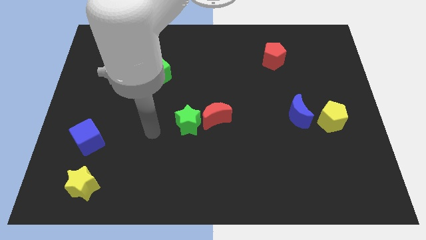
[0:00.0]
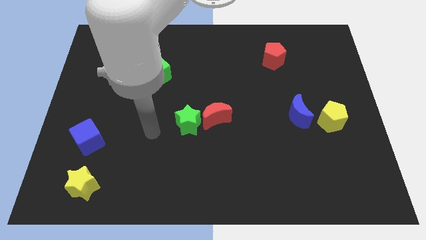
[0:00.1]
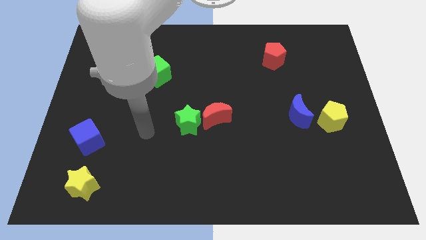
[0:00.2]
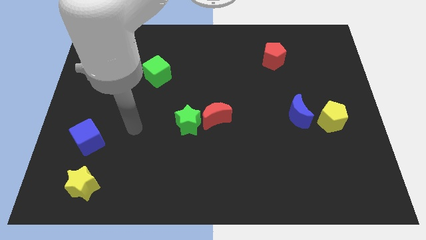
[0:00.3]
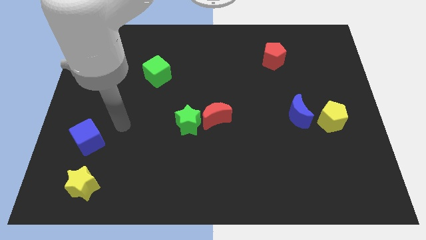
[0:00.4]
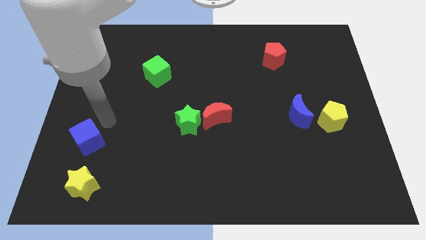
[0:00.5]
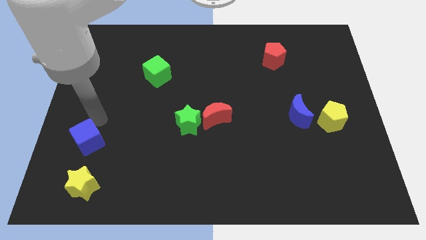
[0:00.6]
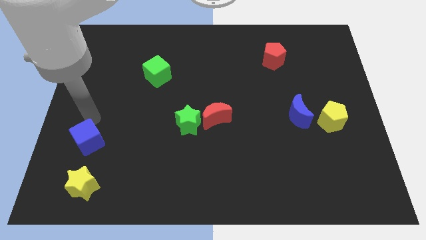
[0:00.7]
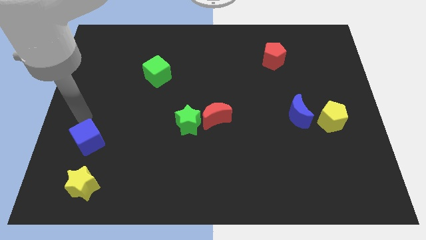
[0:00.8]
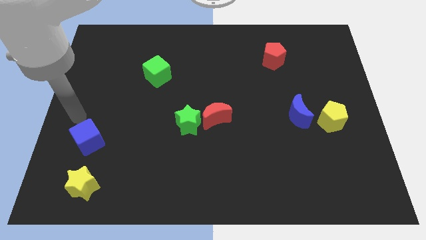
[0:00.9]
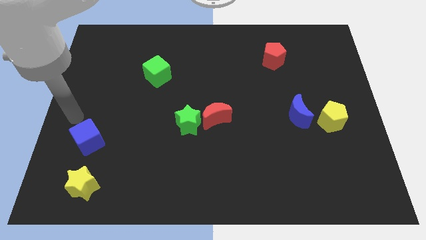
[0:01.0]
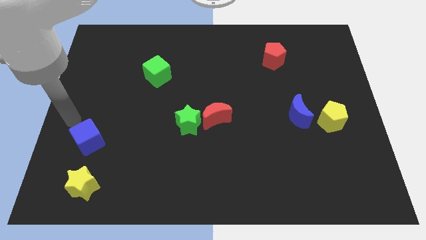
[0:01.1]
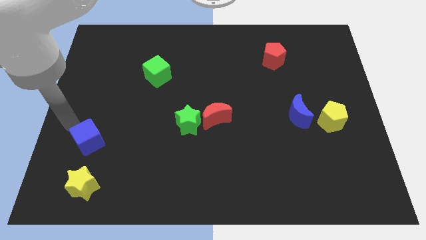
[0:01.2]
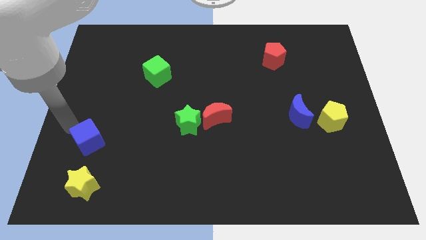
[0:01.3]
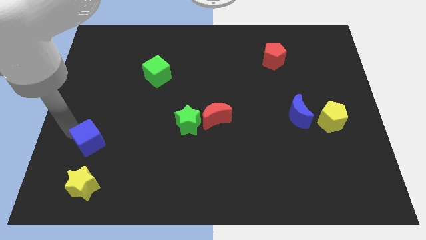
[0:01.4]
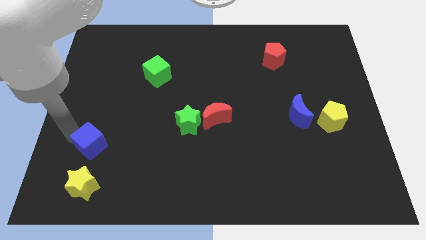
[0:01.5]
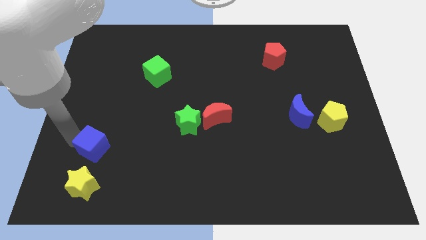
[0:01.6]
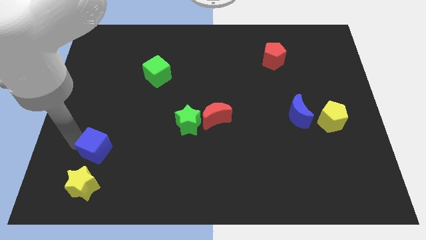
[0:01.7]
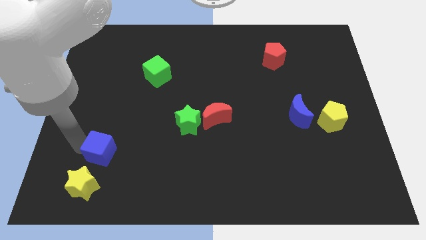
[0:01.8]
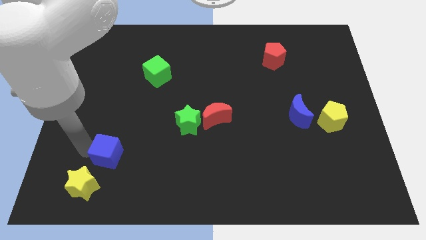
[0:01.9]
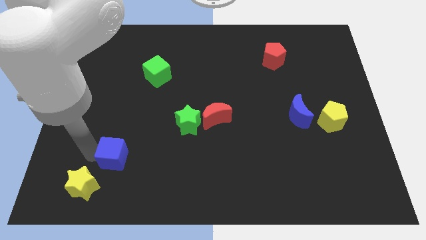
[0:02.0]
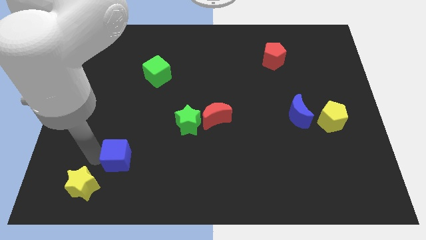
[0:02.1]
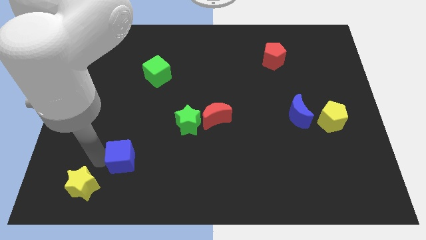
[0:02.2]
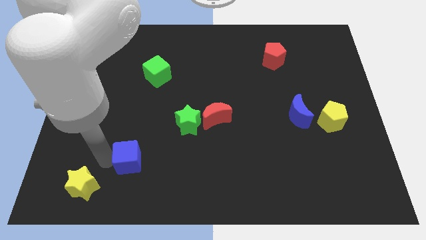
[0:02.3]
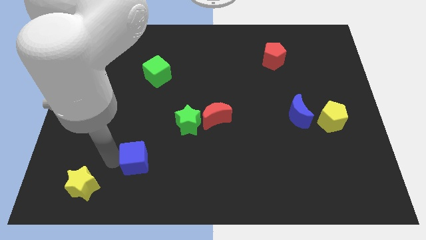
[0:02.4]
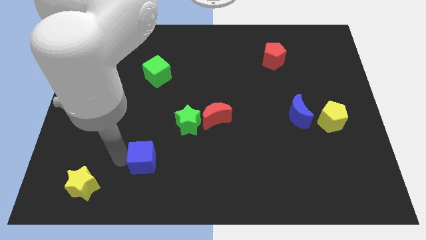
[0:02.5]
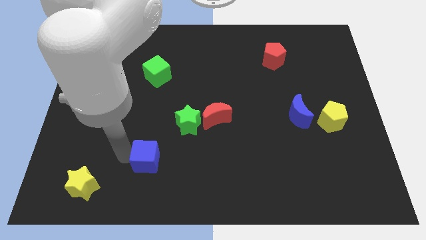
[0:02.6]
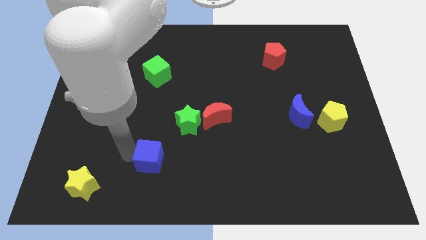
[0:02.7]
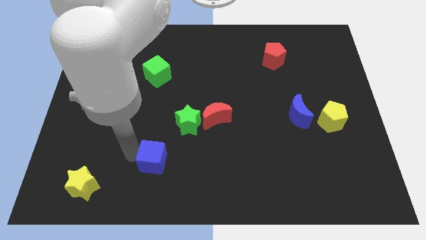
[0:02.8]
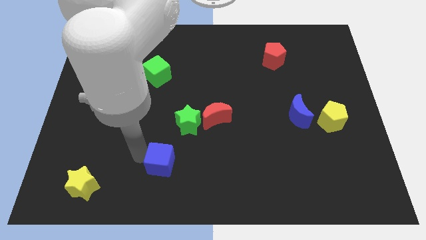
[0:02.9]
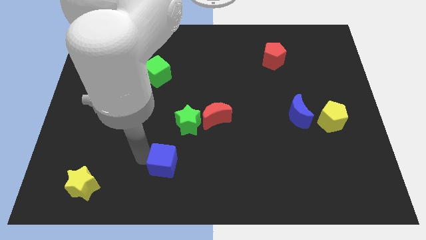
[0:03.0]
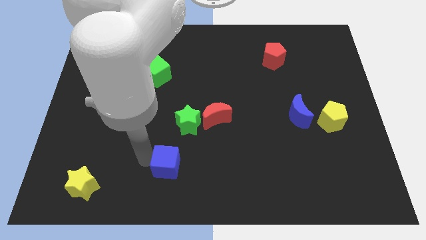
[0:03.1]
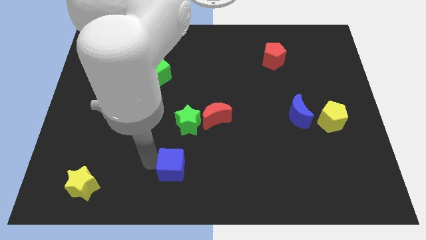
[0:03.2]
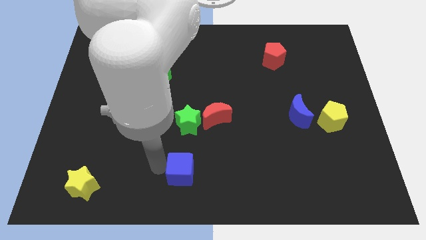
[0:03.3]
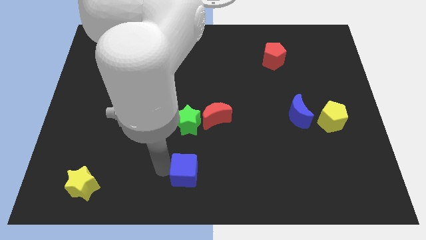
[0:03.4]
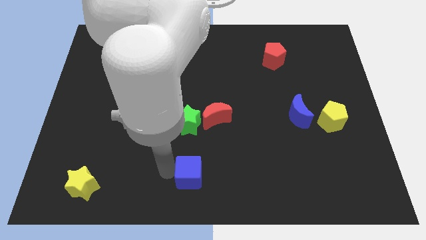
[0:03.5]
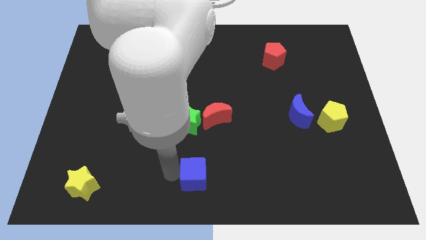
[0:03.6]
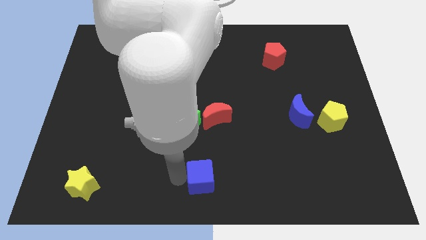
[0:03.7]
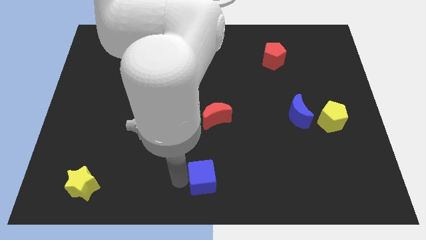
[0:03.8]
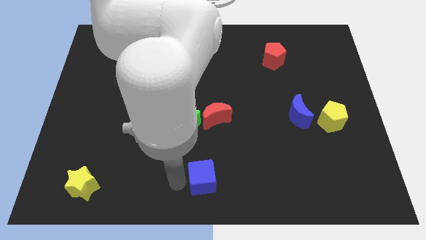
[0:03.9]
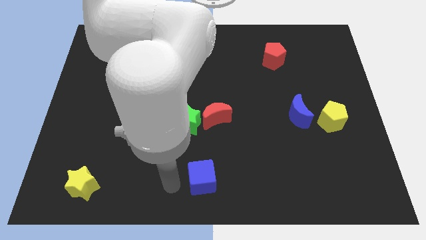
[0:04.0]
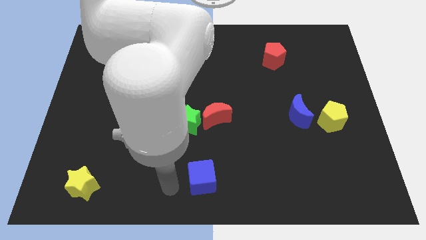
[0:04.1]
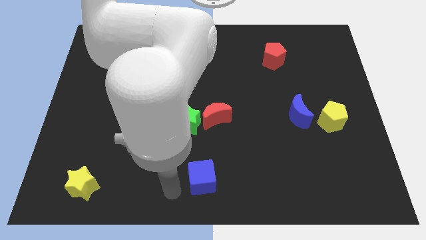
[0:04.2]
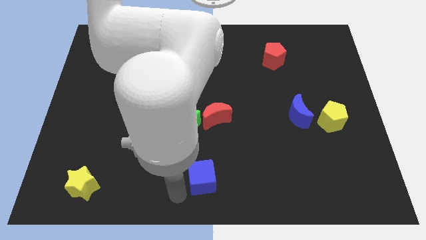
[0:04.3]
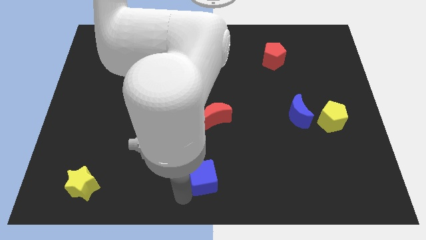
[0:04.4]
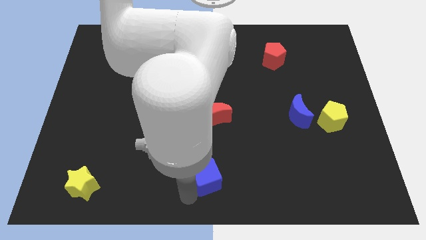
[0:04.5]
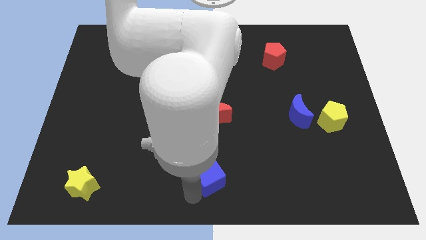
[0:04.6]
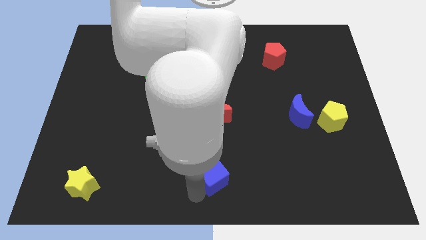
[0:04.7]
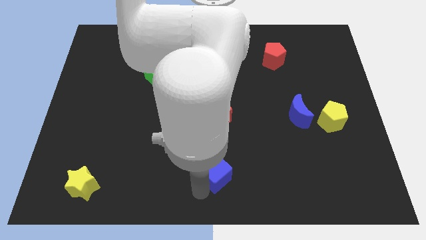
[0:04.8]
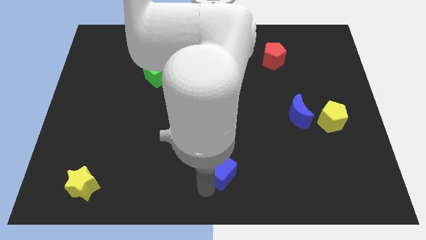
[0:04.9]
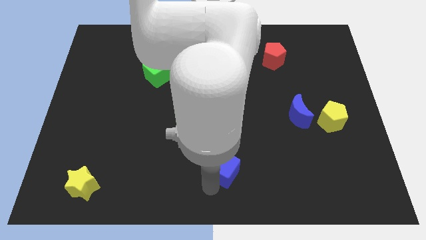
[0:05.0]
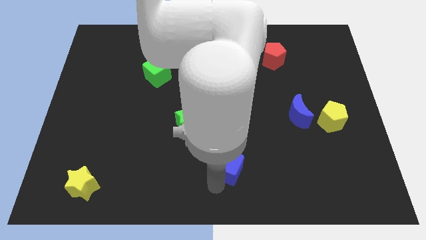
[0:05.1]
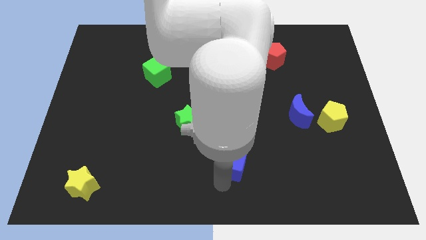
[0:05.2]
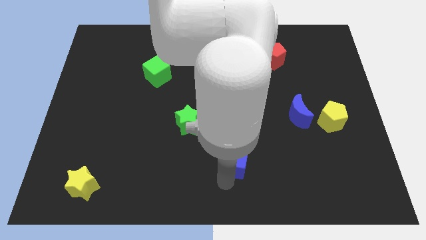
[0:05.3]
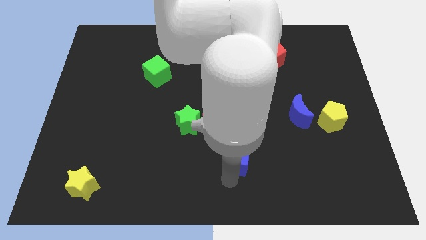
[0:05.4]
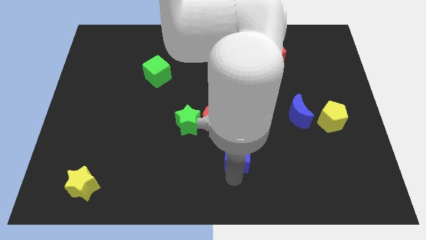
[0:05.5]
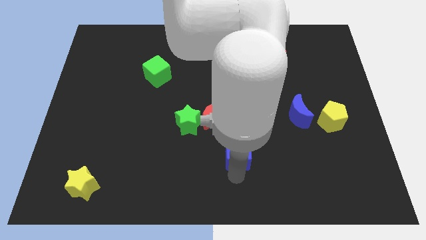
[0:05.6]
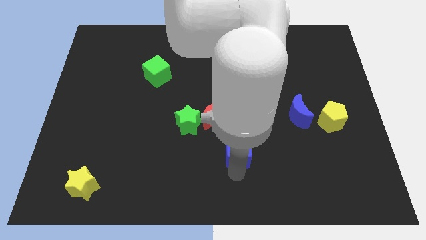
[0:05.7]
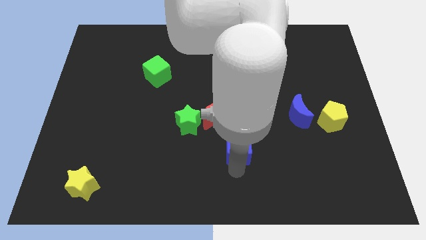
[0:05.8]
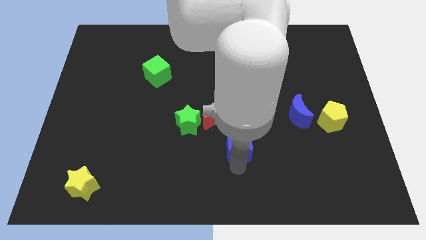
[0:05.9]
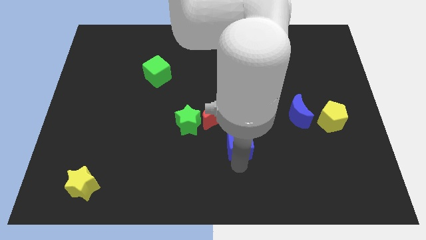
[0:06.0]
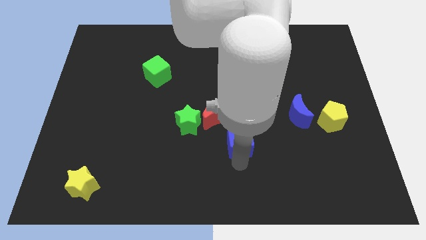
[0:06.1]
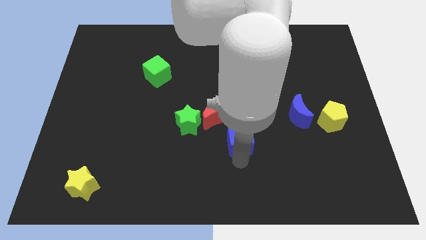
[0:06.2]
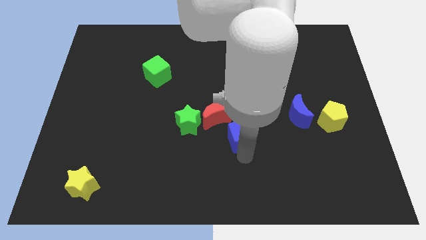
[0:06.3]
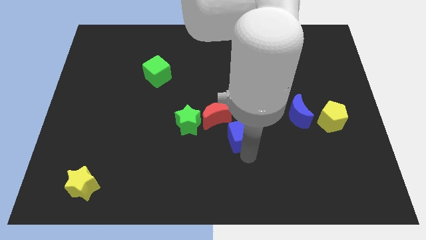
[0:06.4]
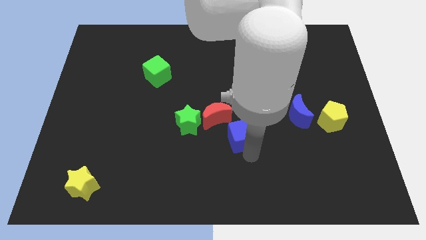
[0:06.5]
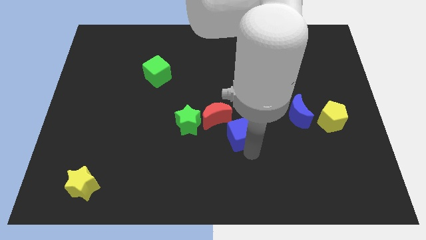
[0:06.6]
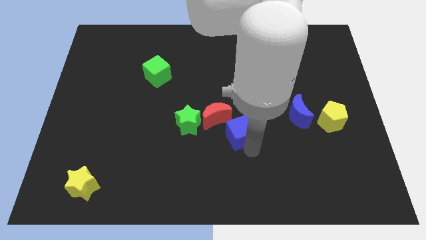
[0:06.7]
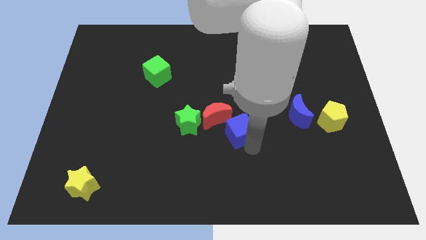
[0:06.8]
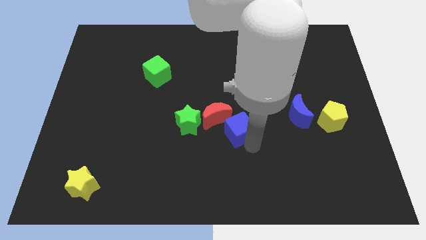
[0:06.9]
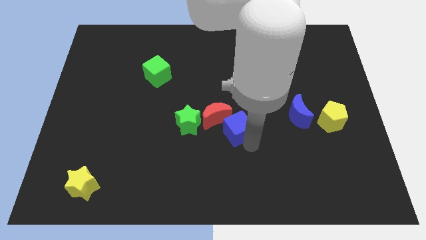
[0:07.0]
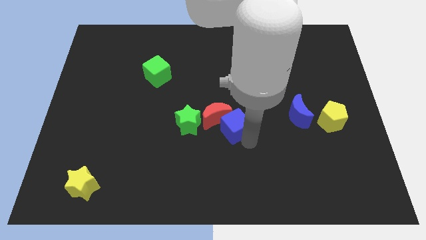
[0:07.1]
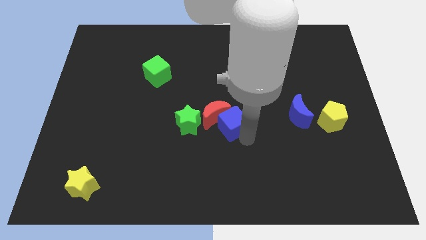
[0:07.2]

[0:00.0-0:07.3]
move the blue cube towards the red moon

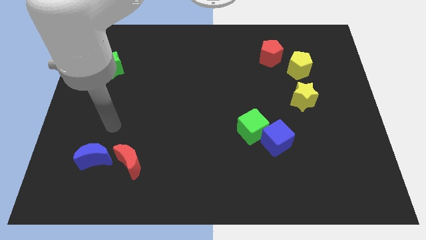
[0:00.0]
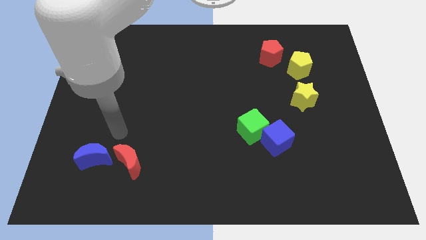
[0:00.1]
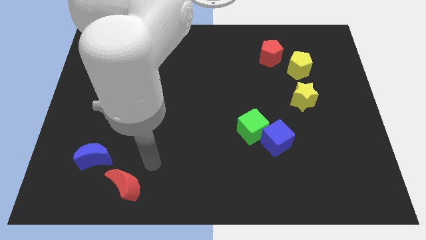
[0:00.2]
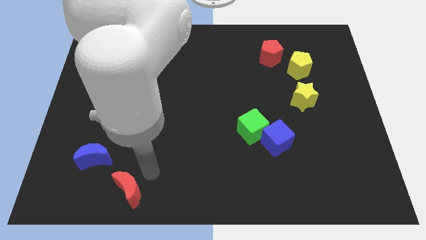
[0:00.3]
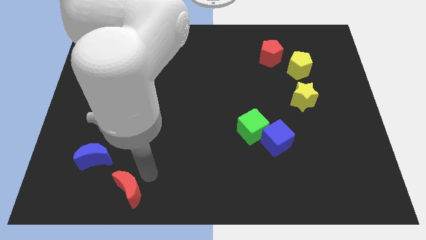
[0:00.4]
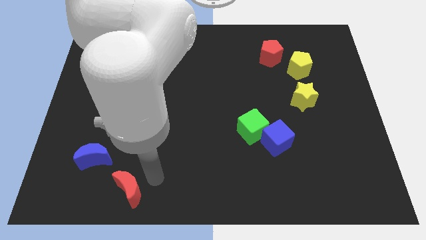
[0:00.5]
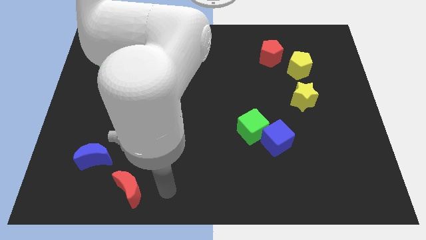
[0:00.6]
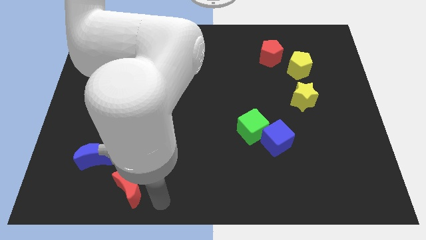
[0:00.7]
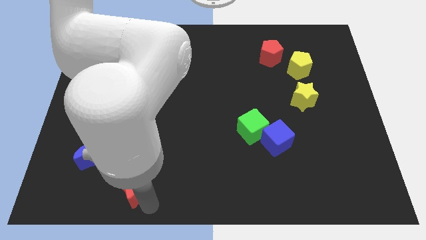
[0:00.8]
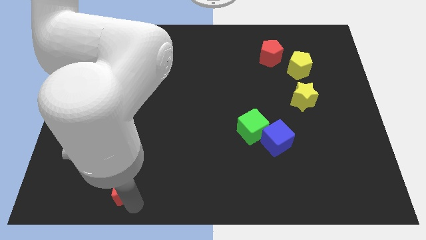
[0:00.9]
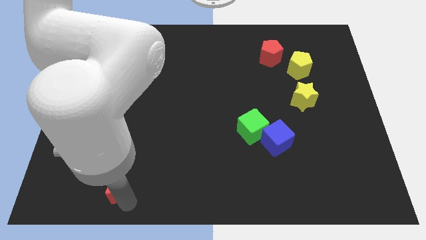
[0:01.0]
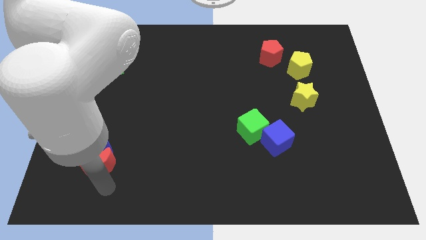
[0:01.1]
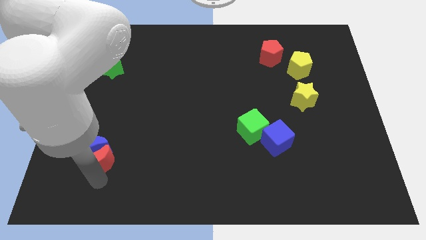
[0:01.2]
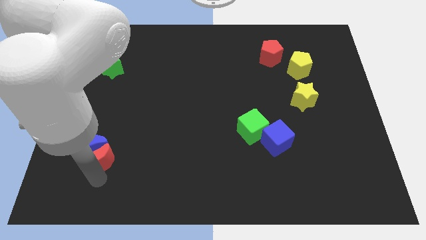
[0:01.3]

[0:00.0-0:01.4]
push the red moon to the blue moon
